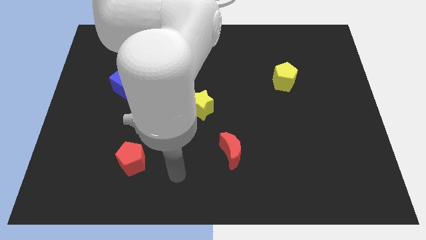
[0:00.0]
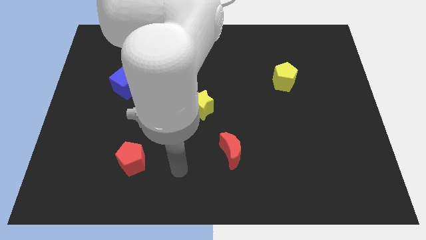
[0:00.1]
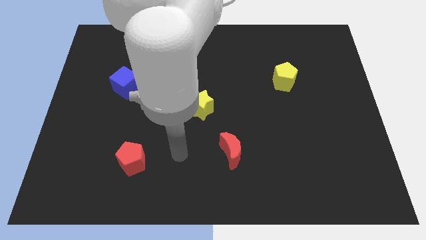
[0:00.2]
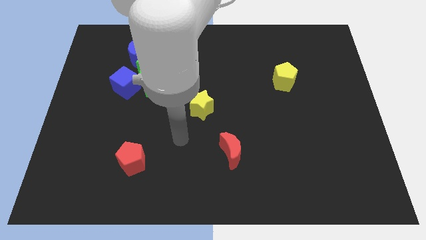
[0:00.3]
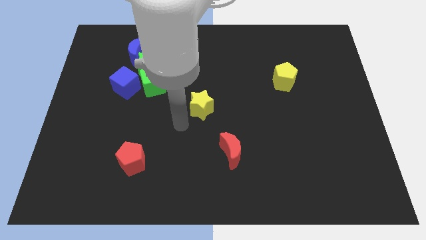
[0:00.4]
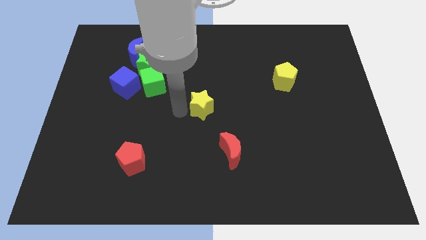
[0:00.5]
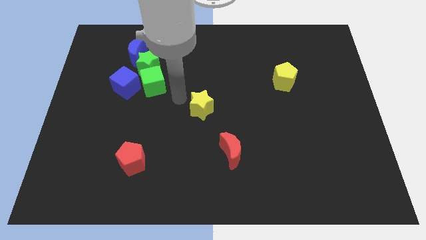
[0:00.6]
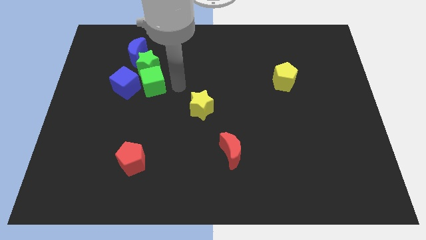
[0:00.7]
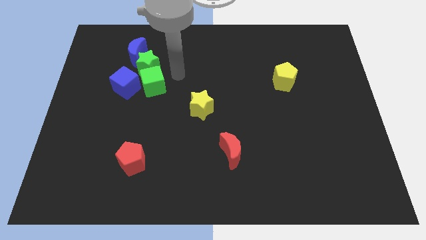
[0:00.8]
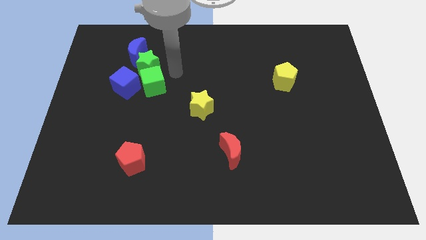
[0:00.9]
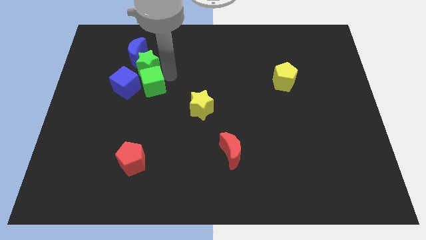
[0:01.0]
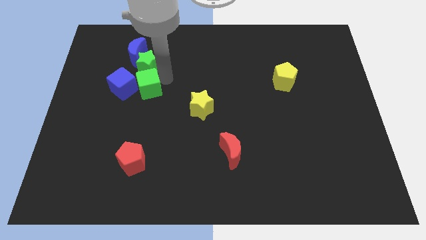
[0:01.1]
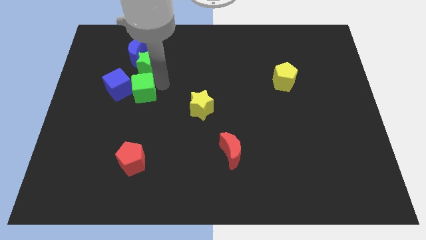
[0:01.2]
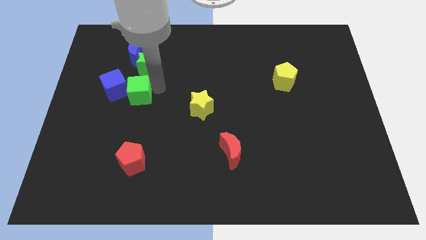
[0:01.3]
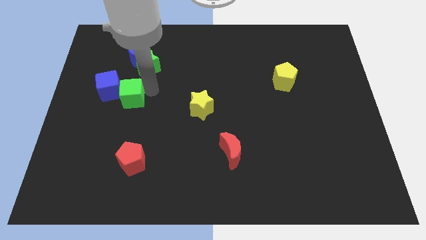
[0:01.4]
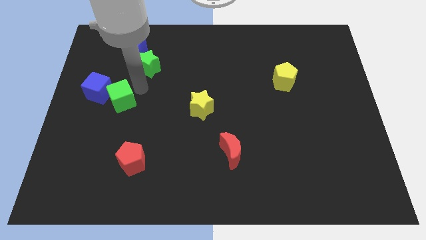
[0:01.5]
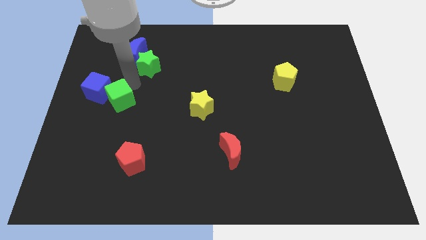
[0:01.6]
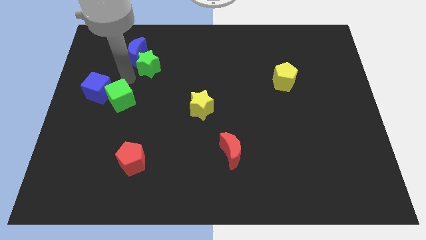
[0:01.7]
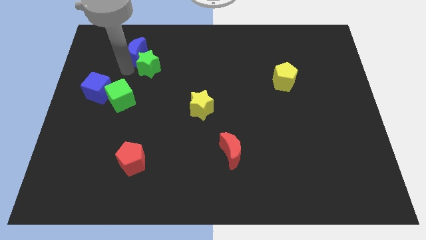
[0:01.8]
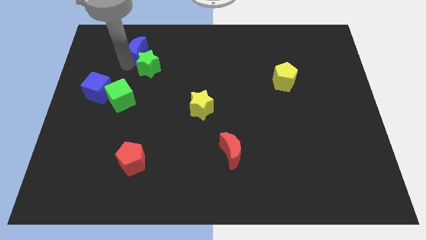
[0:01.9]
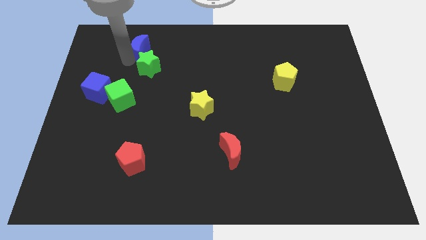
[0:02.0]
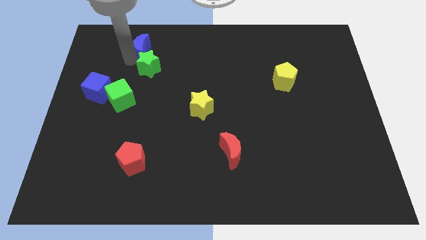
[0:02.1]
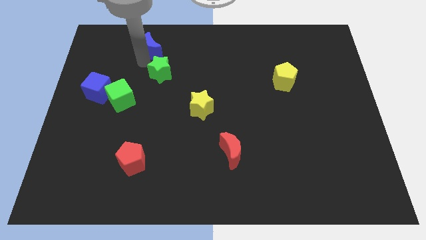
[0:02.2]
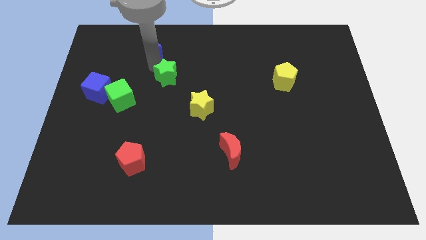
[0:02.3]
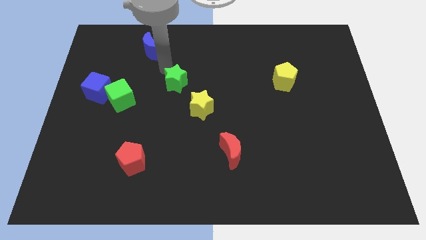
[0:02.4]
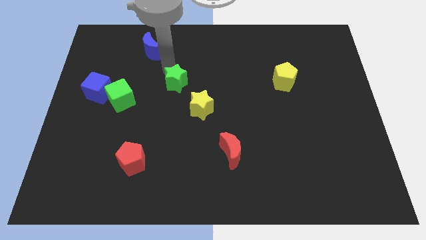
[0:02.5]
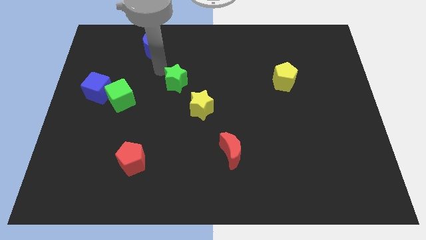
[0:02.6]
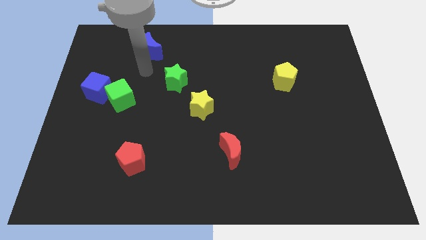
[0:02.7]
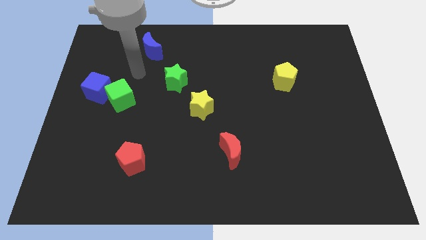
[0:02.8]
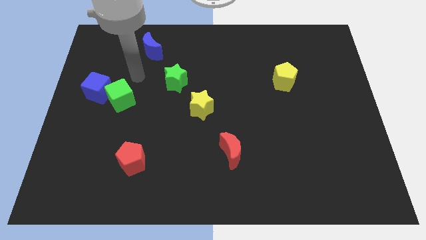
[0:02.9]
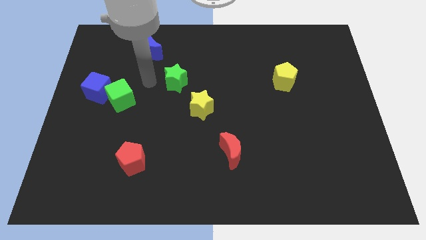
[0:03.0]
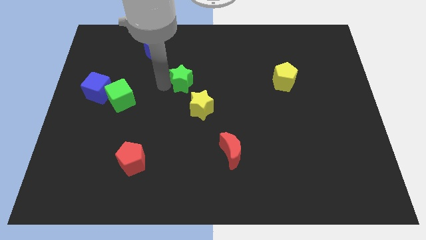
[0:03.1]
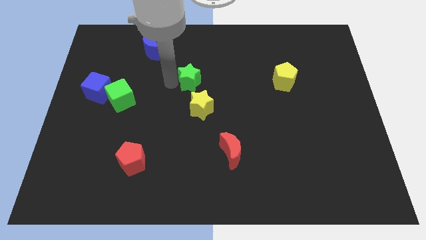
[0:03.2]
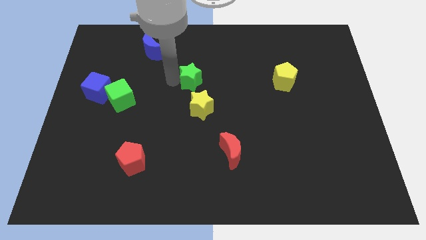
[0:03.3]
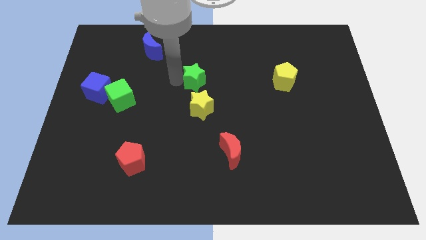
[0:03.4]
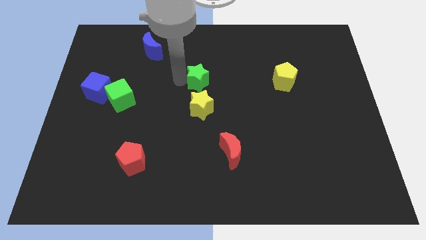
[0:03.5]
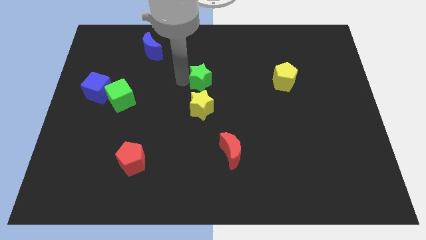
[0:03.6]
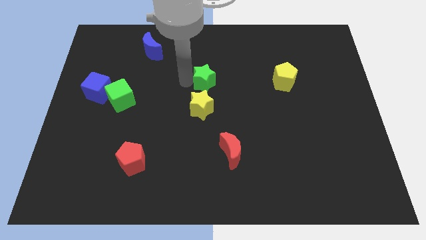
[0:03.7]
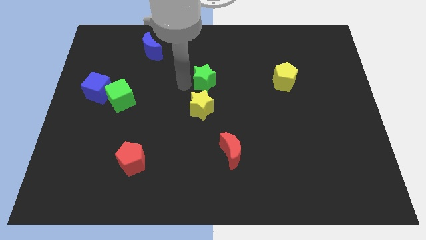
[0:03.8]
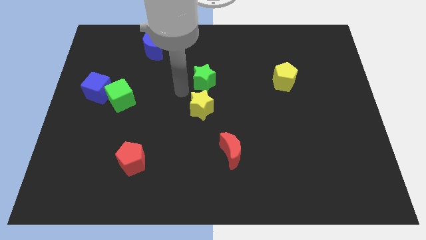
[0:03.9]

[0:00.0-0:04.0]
move the green star to the center of the board

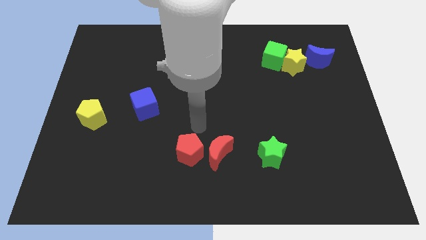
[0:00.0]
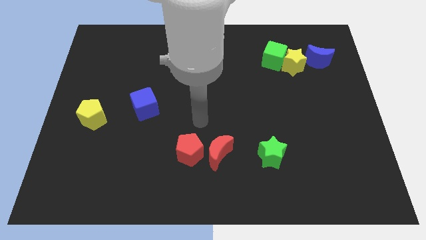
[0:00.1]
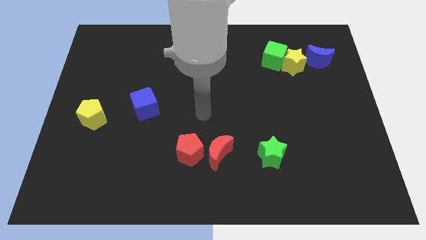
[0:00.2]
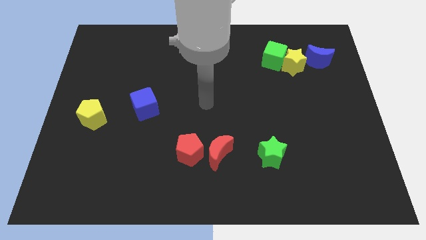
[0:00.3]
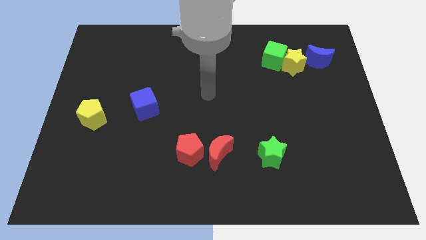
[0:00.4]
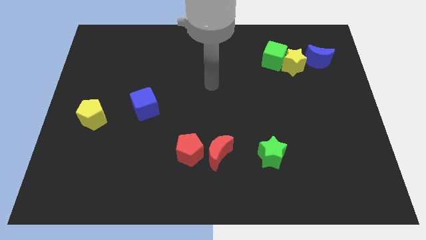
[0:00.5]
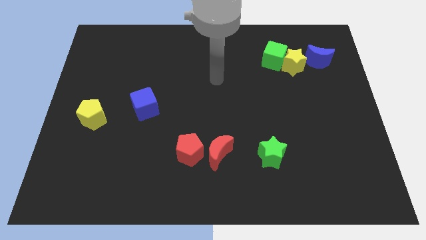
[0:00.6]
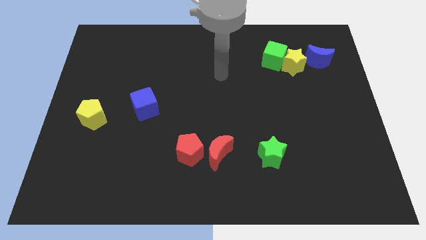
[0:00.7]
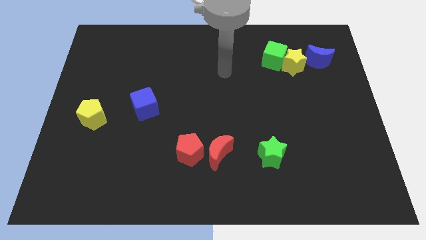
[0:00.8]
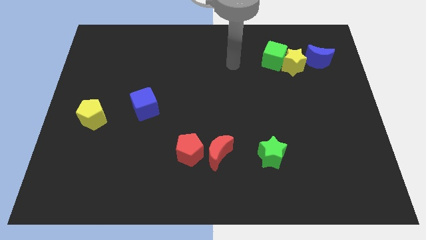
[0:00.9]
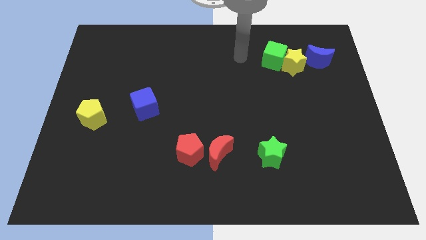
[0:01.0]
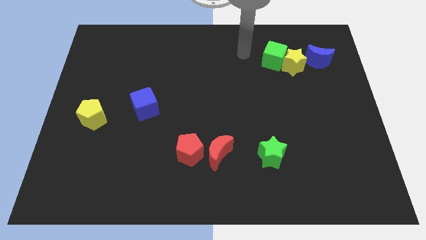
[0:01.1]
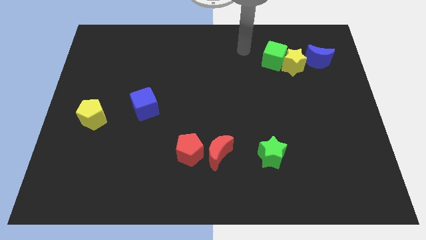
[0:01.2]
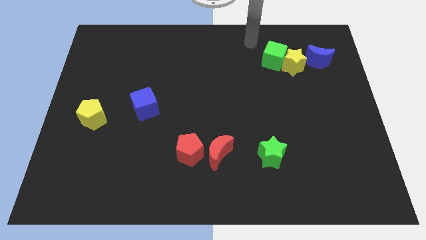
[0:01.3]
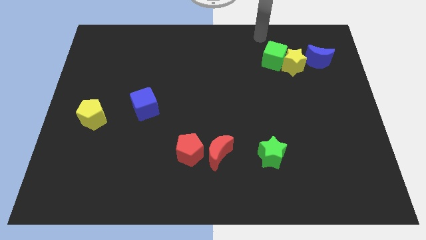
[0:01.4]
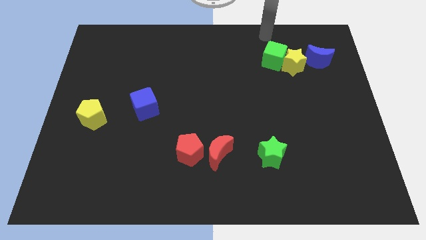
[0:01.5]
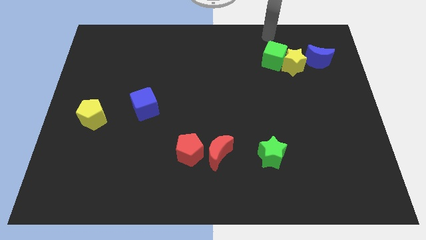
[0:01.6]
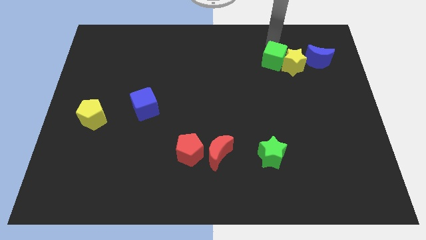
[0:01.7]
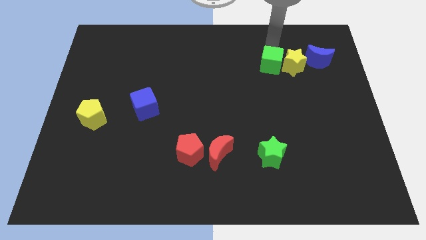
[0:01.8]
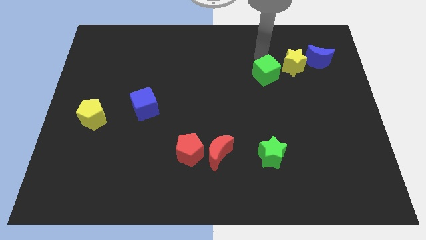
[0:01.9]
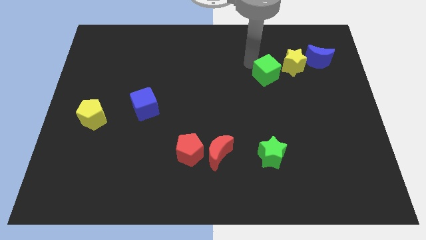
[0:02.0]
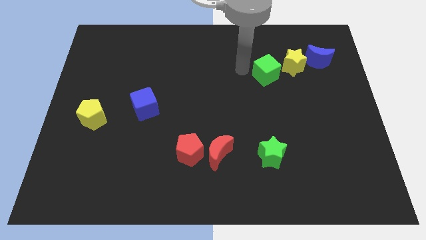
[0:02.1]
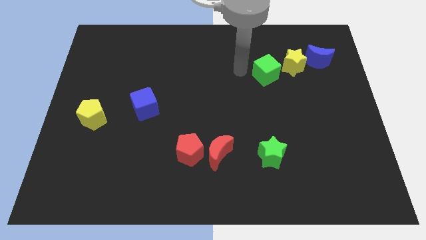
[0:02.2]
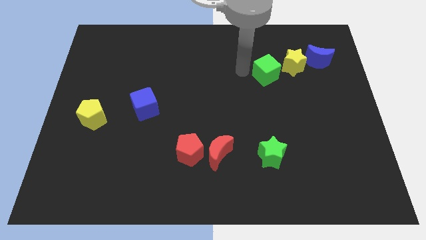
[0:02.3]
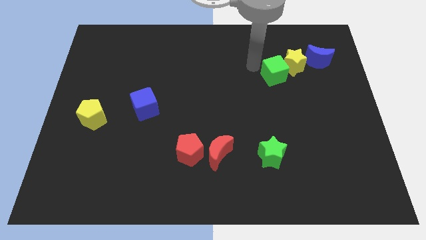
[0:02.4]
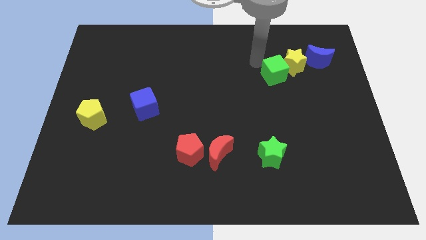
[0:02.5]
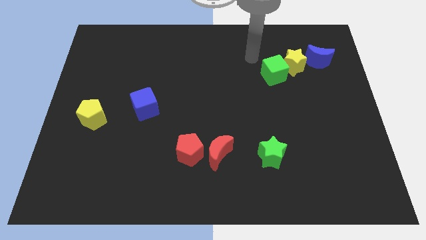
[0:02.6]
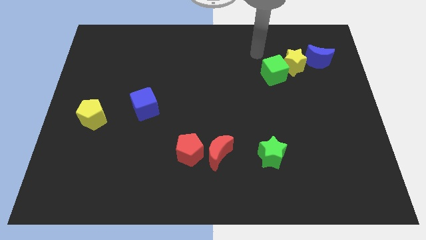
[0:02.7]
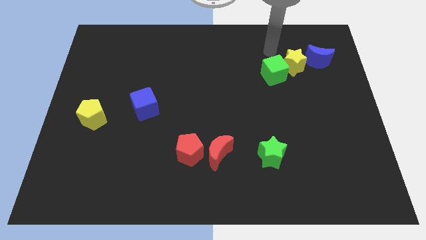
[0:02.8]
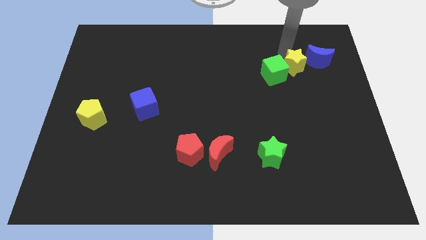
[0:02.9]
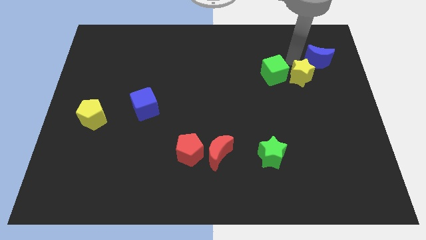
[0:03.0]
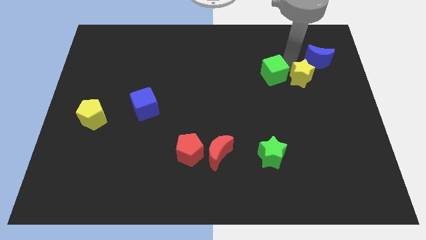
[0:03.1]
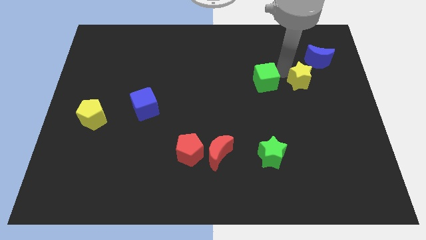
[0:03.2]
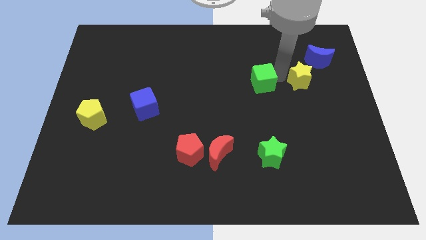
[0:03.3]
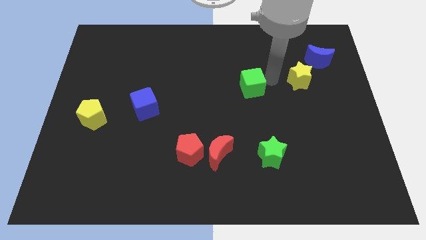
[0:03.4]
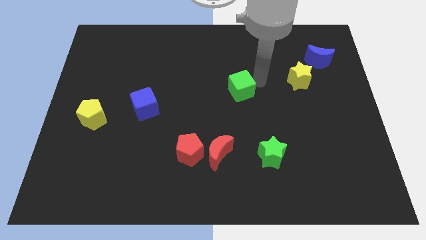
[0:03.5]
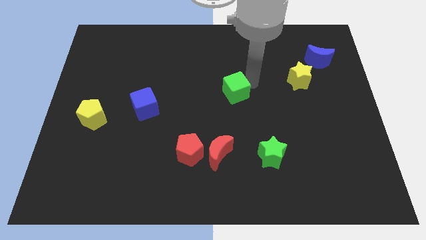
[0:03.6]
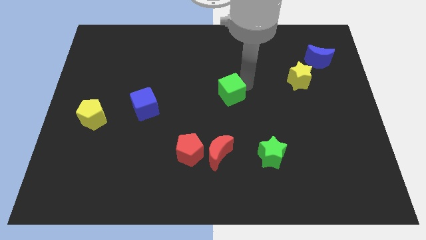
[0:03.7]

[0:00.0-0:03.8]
place the green cube above the red crescent

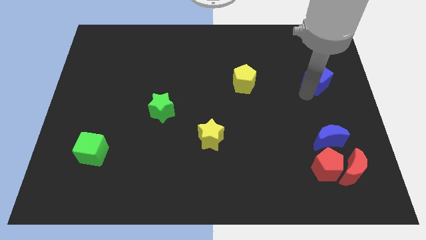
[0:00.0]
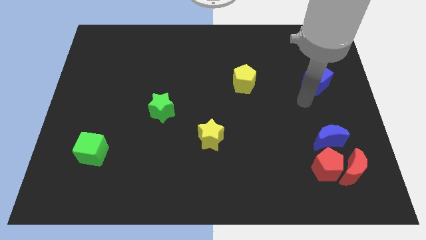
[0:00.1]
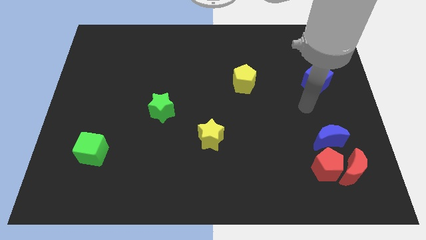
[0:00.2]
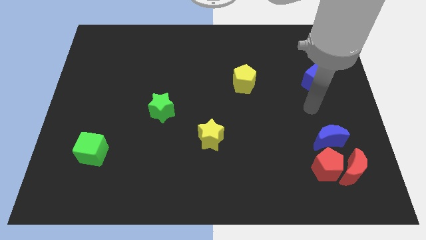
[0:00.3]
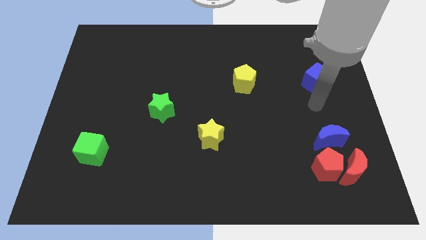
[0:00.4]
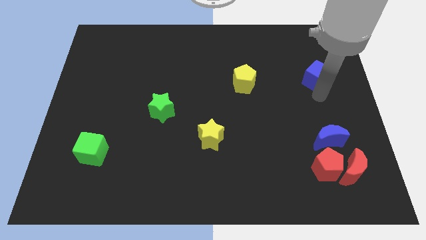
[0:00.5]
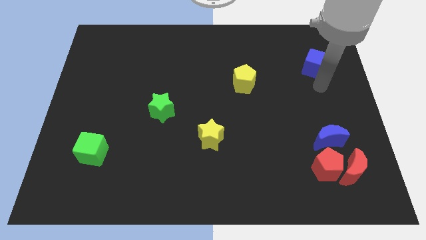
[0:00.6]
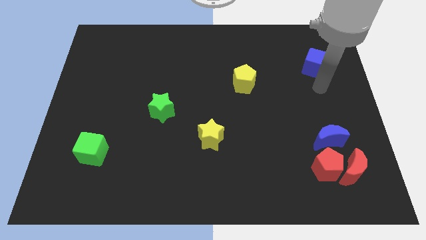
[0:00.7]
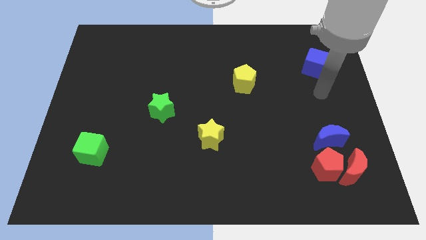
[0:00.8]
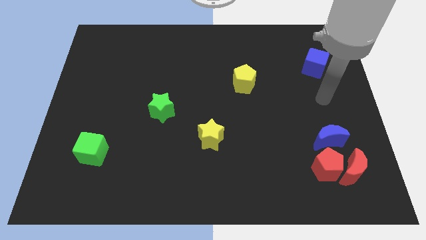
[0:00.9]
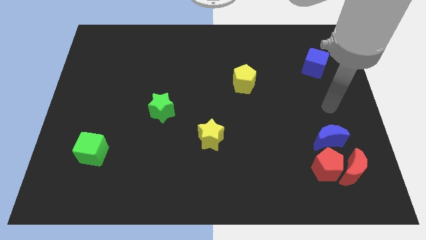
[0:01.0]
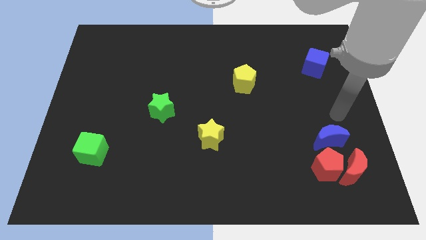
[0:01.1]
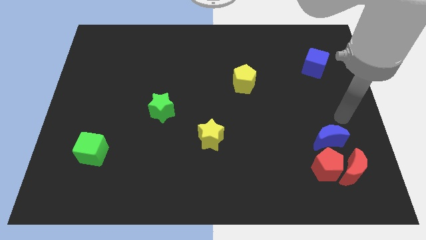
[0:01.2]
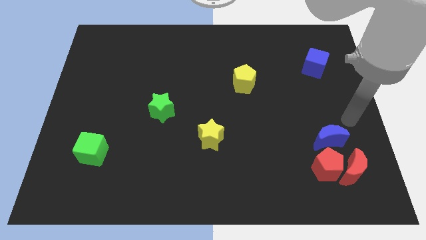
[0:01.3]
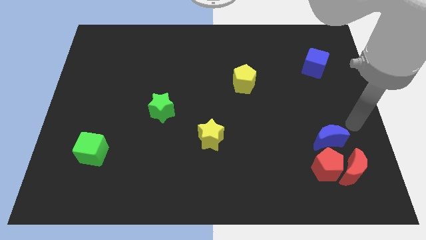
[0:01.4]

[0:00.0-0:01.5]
push the blue cube slightly to the top
